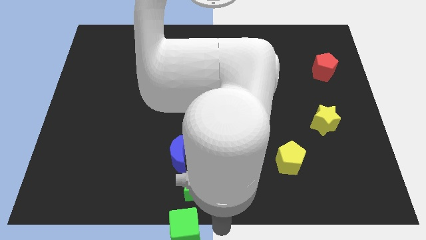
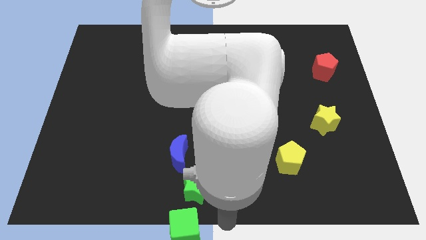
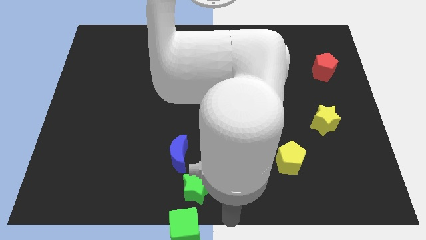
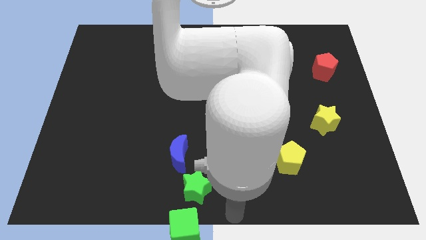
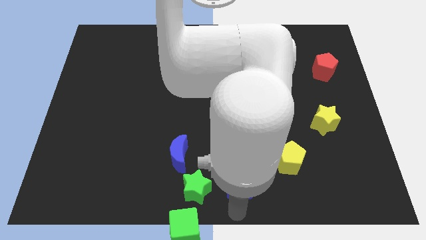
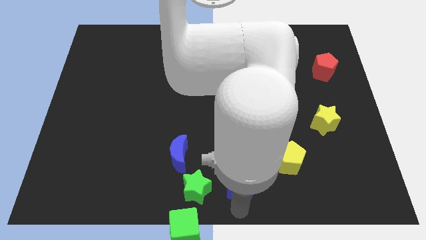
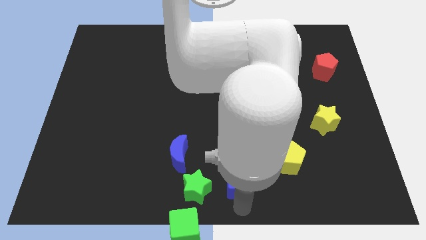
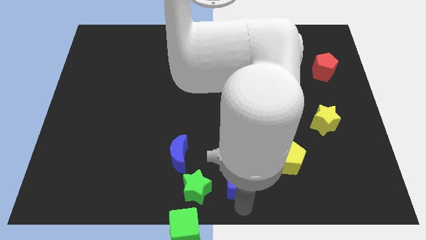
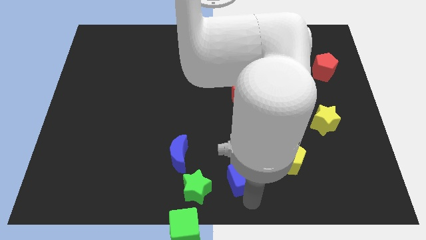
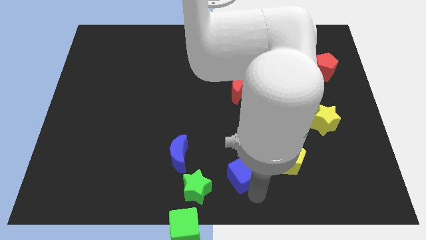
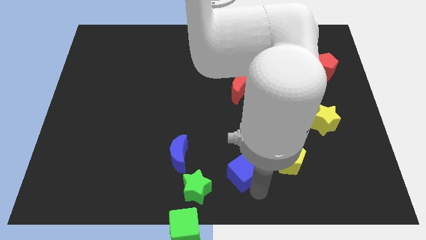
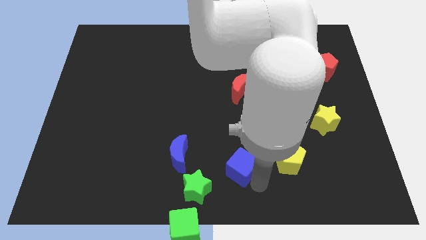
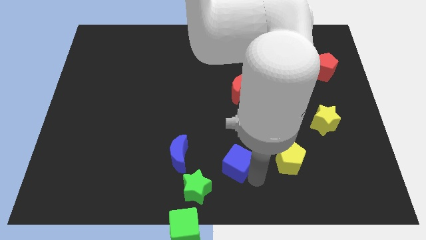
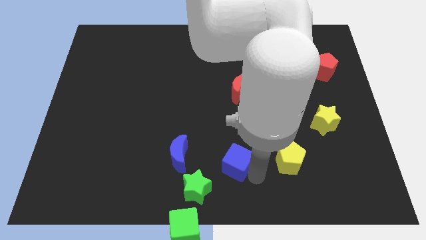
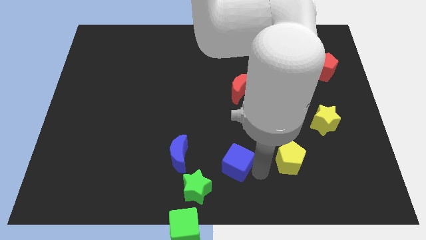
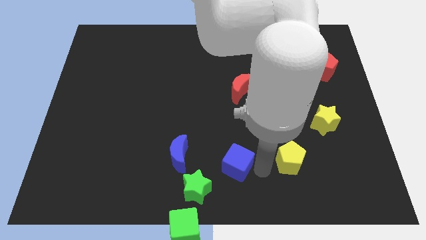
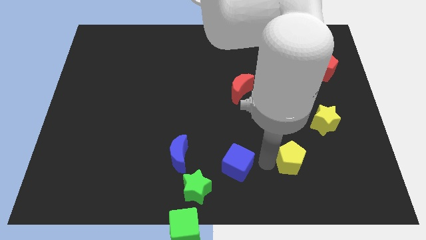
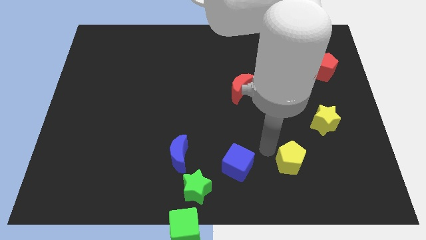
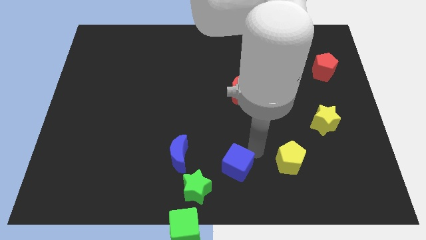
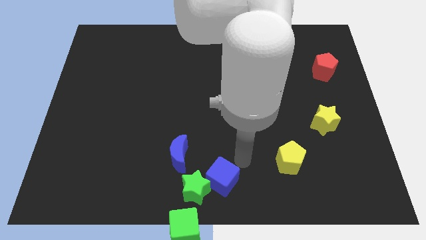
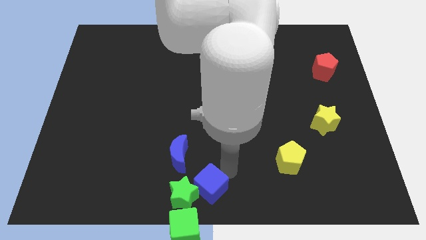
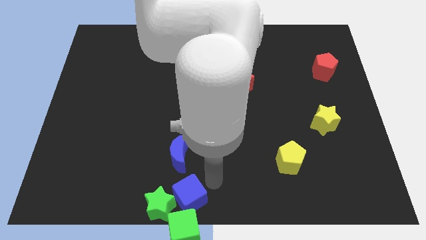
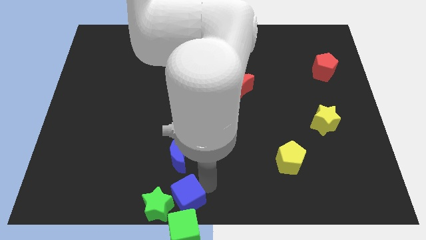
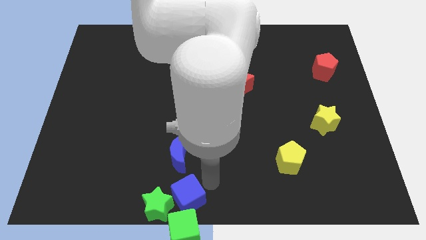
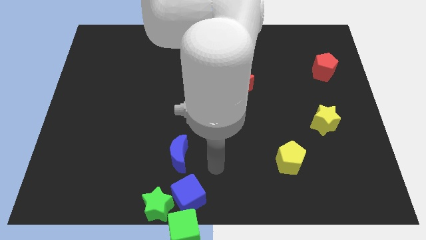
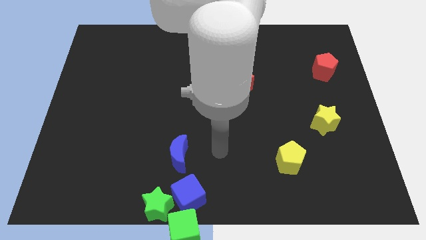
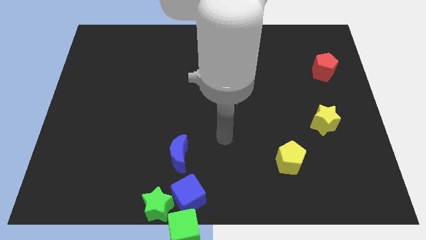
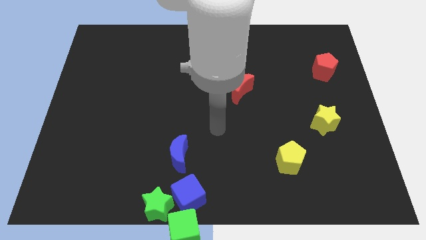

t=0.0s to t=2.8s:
push the blue cube into the green star

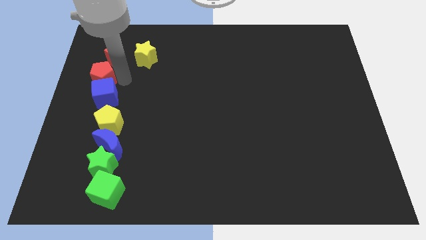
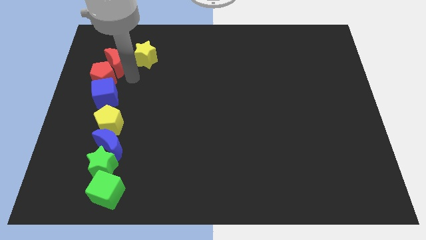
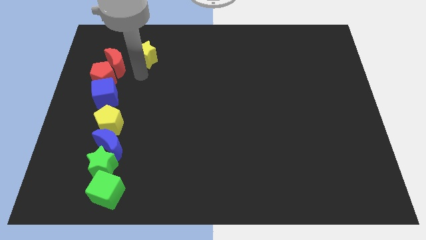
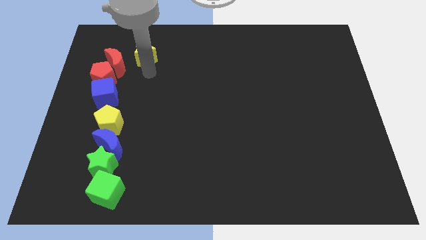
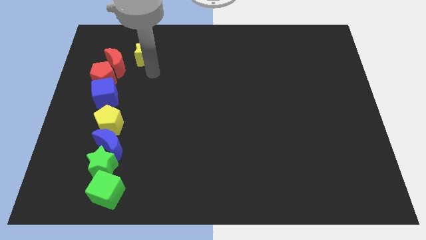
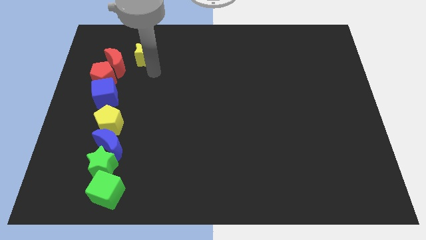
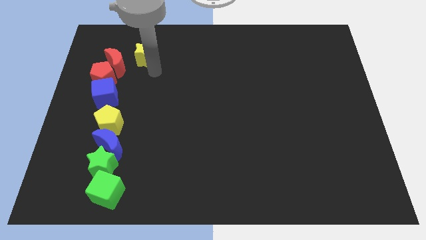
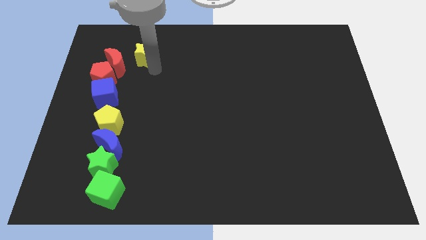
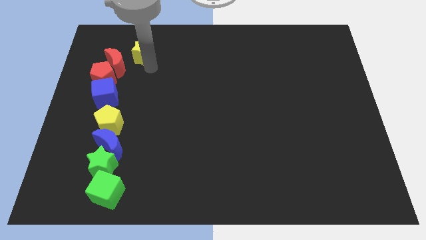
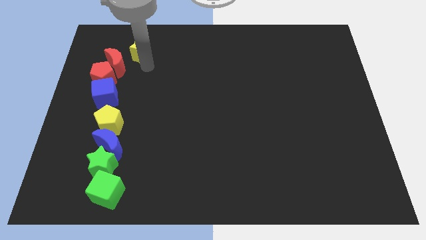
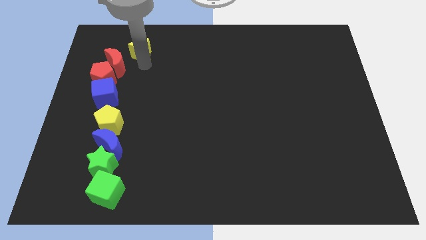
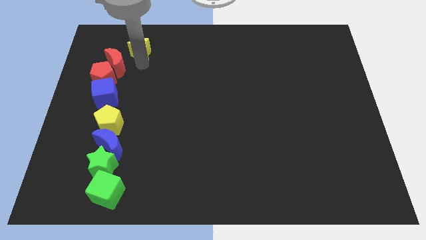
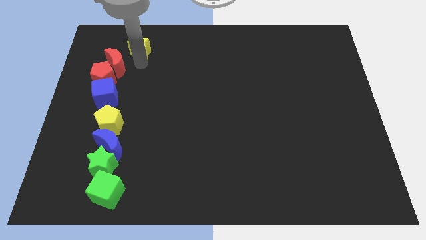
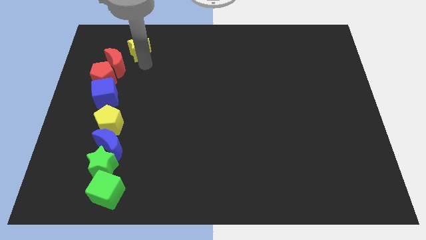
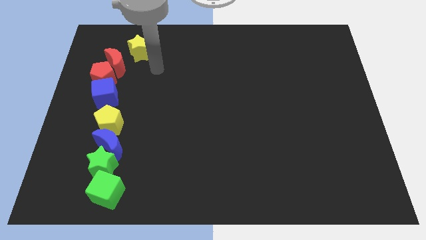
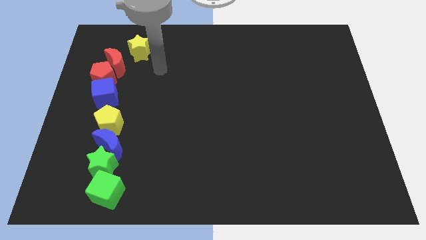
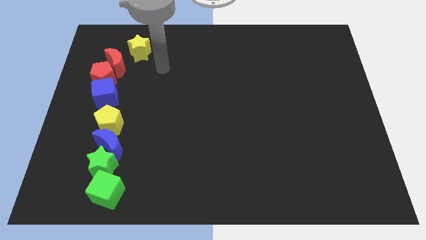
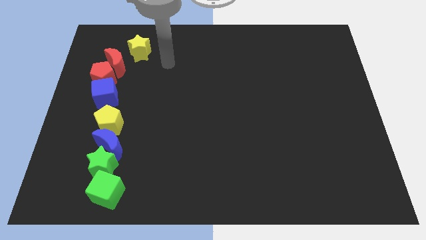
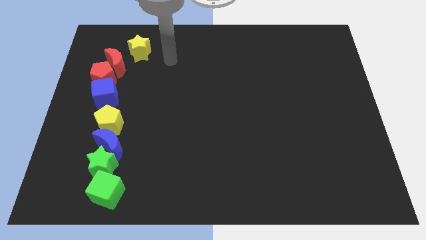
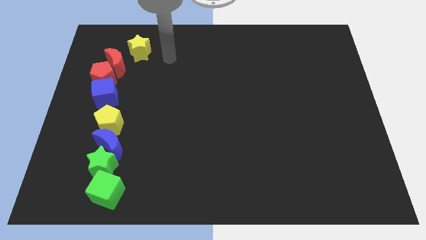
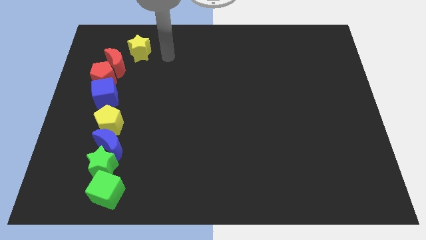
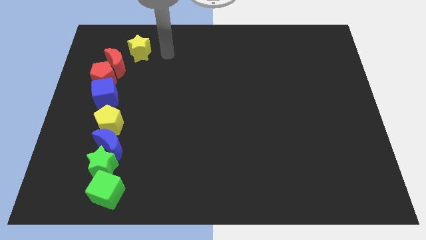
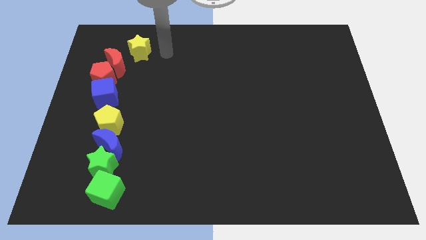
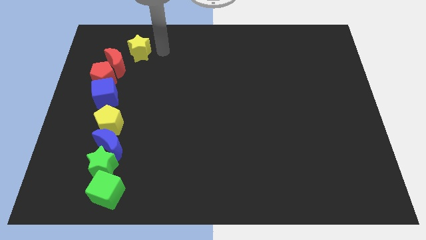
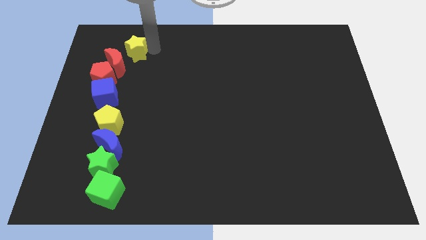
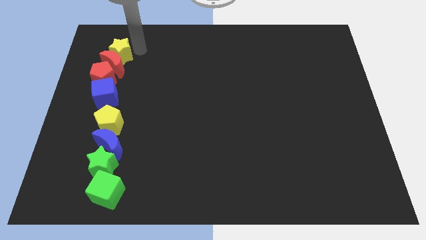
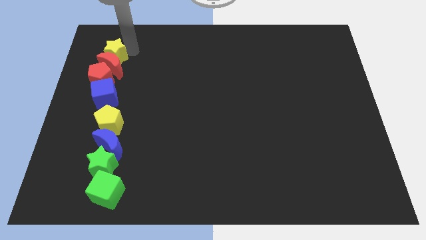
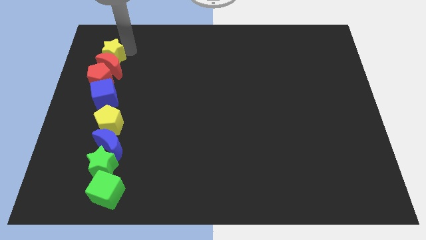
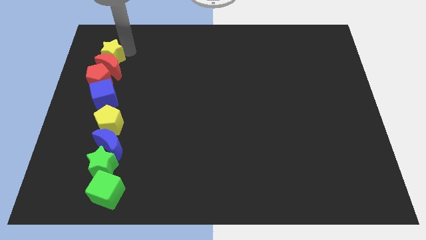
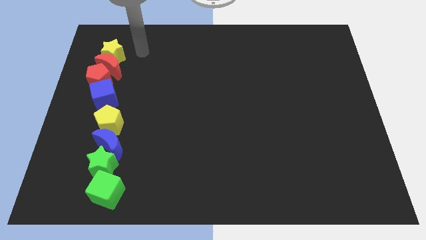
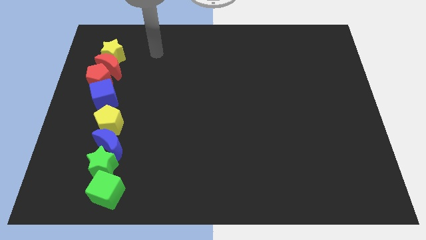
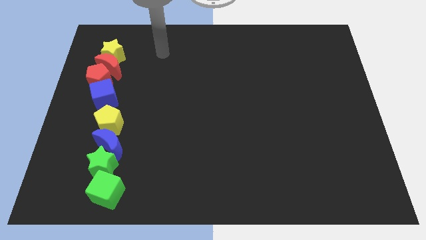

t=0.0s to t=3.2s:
move the yellow star into the red moon at the top left corner of the board

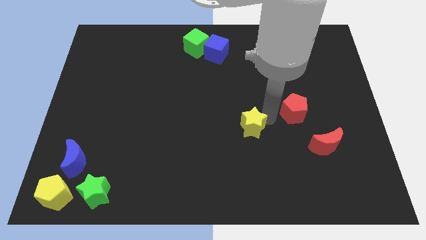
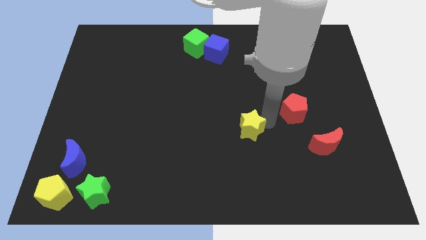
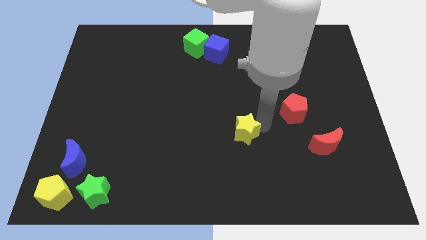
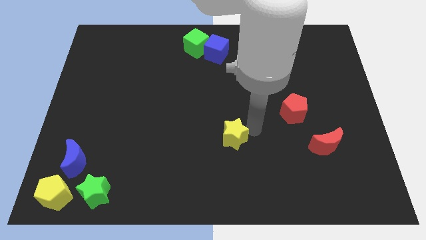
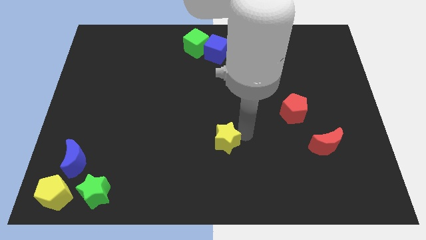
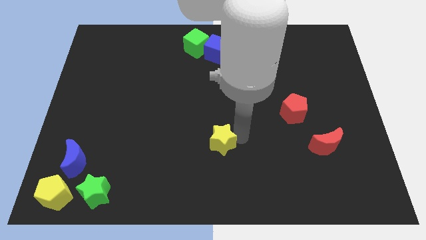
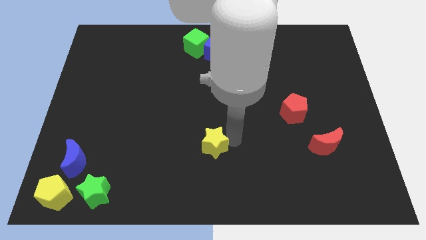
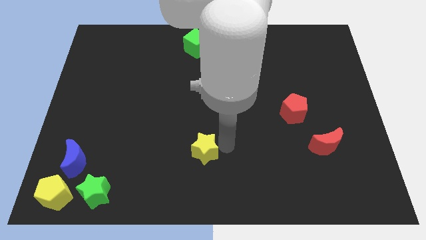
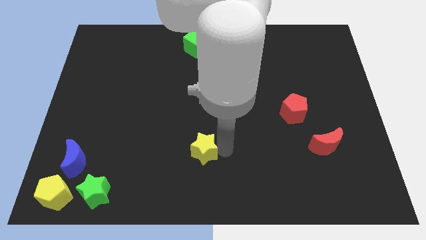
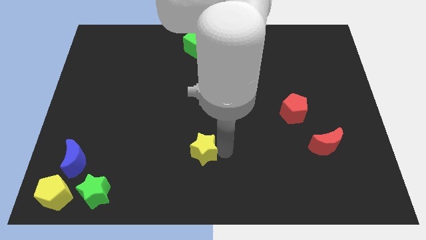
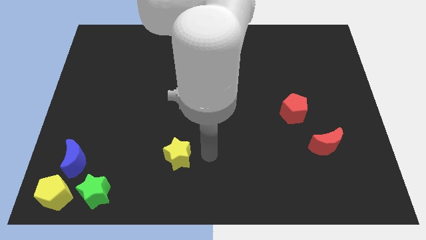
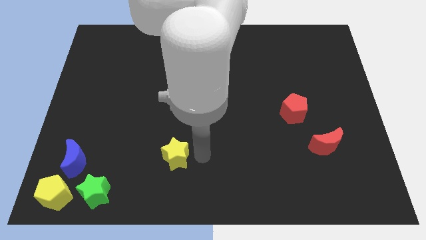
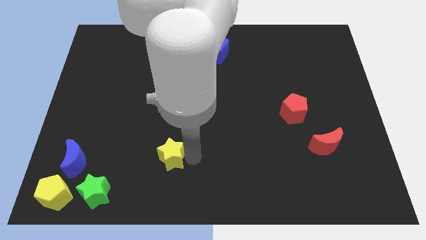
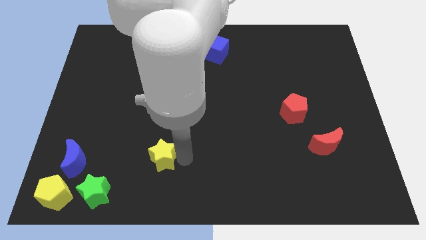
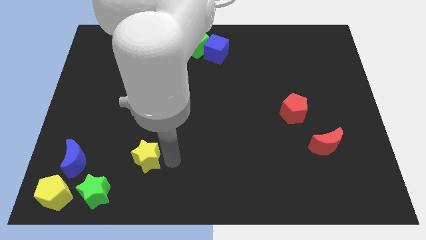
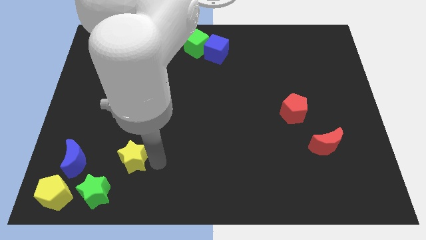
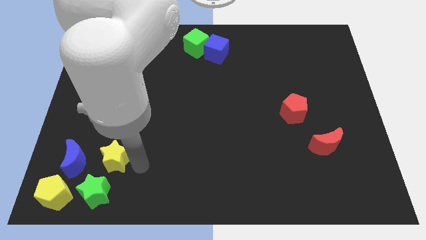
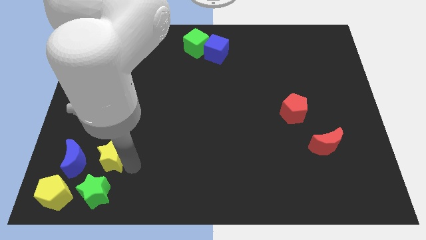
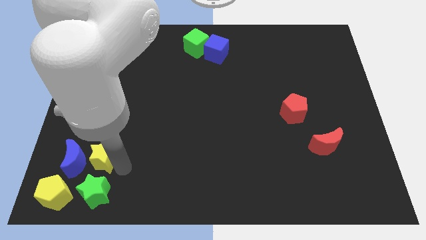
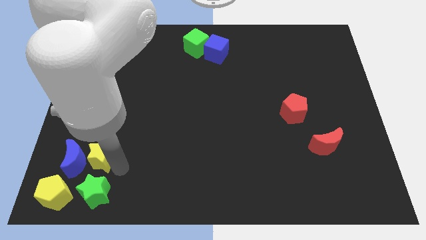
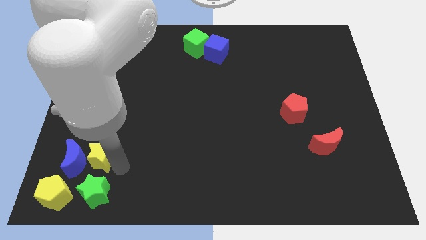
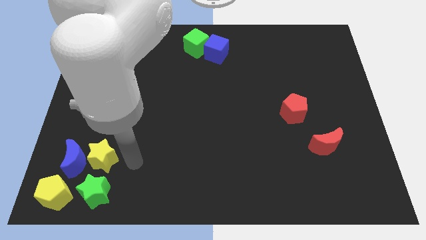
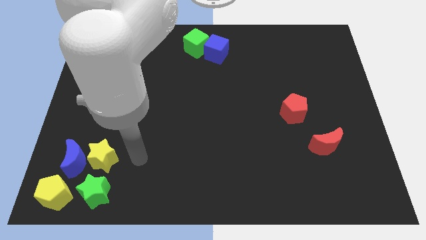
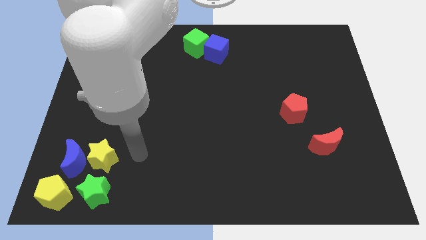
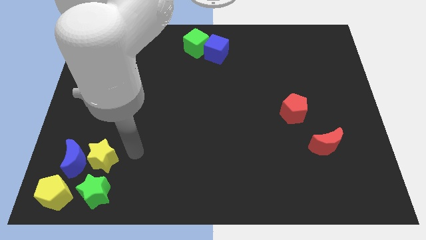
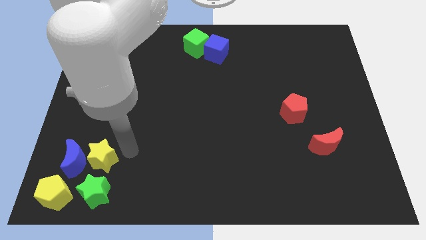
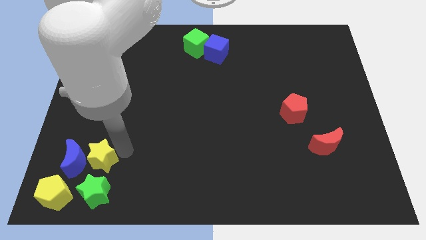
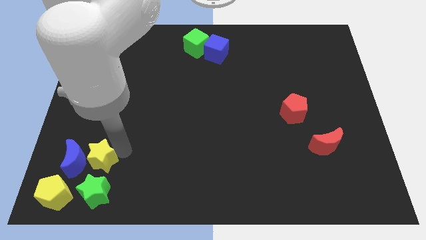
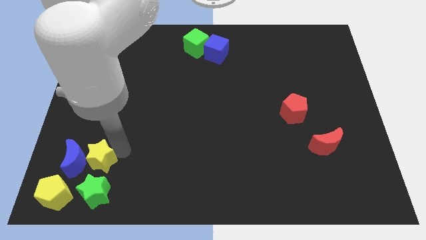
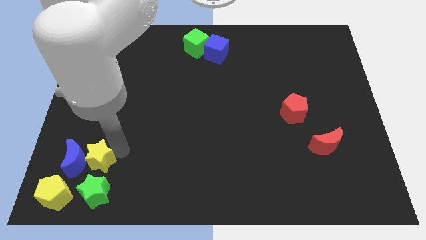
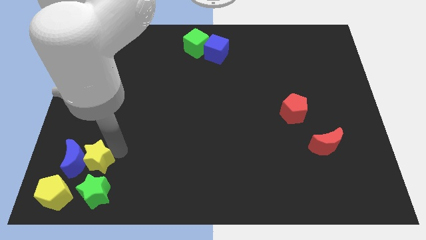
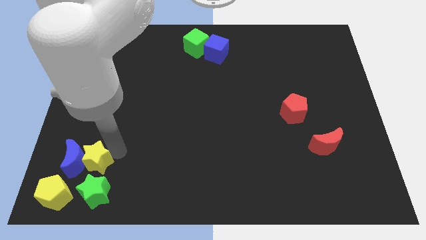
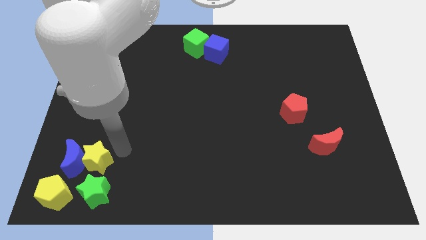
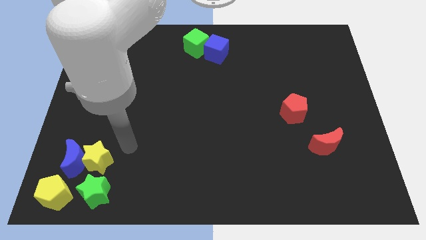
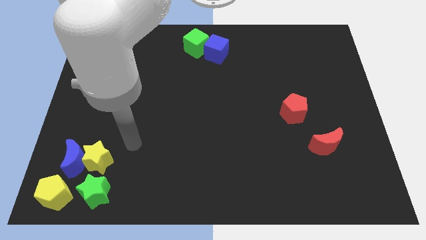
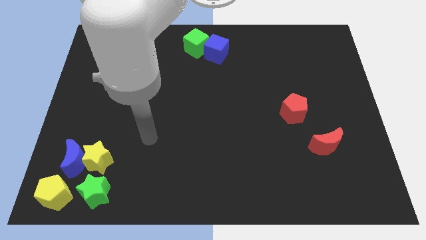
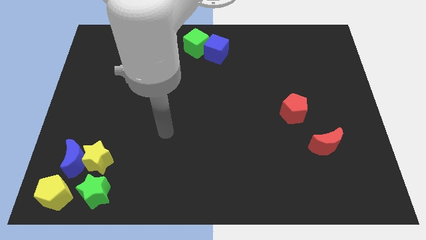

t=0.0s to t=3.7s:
put the yellow star on the right side of the blue crescent
